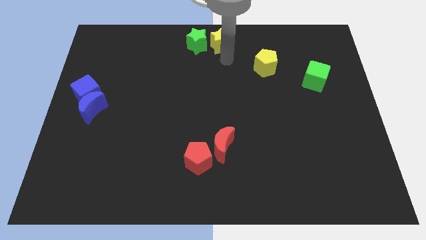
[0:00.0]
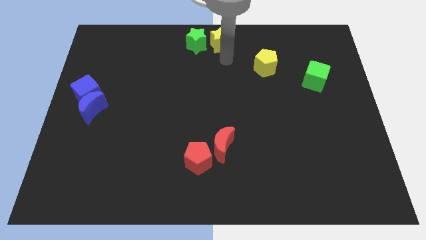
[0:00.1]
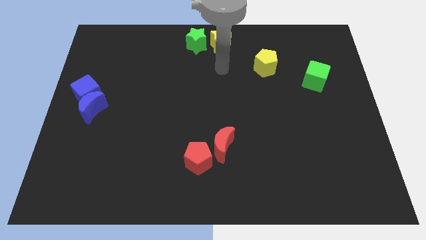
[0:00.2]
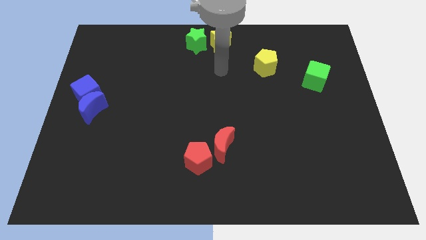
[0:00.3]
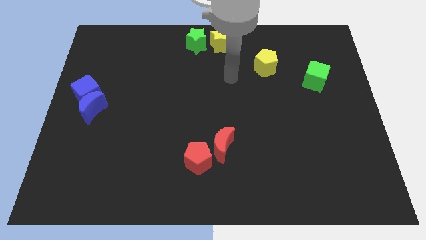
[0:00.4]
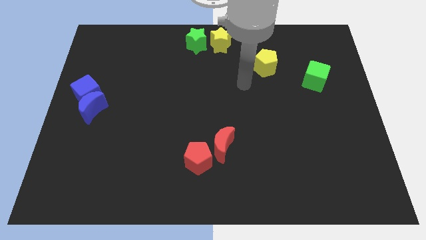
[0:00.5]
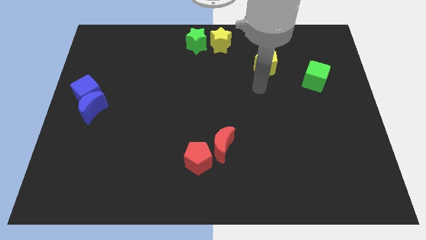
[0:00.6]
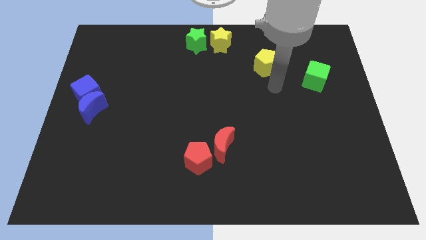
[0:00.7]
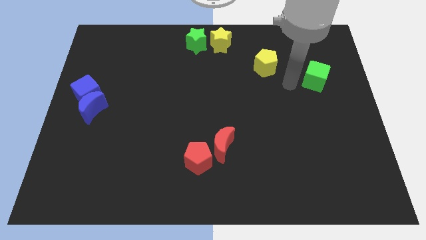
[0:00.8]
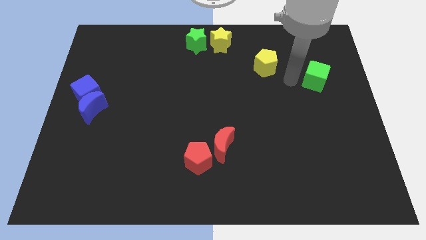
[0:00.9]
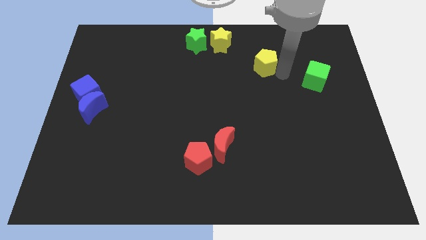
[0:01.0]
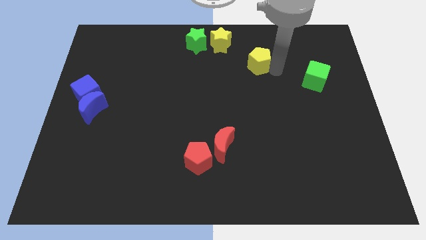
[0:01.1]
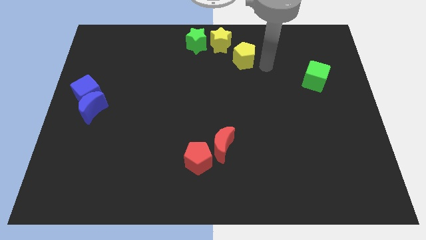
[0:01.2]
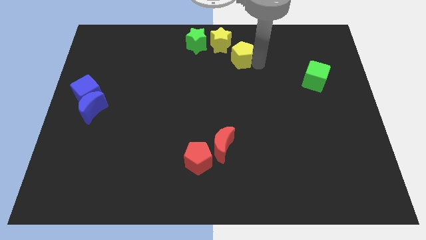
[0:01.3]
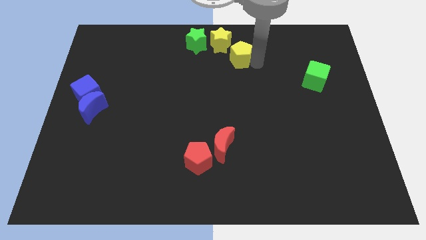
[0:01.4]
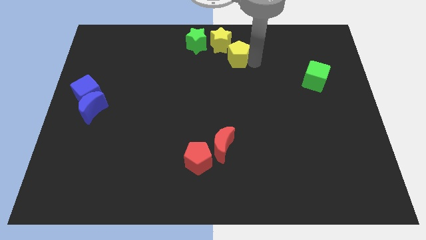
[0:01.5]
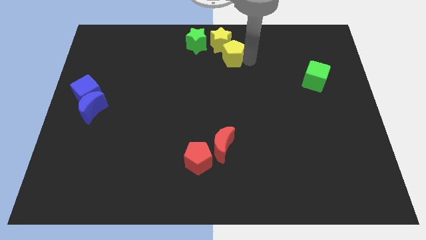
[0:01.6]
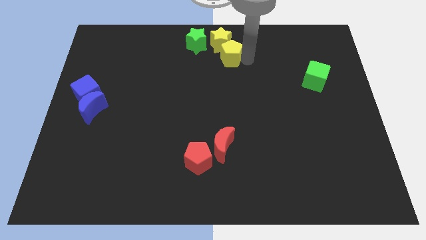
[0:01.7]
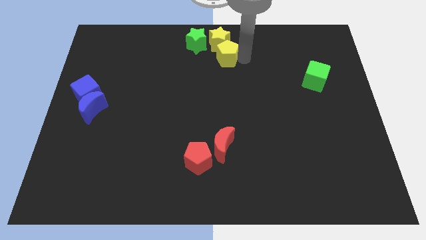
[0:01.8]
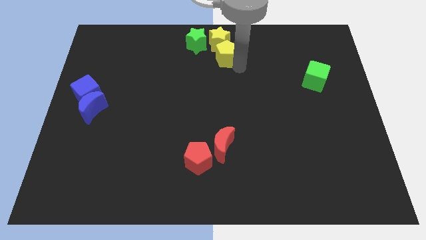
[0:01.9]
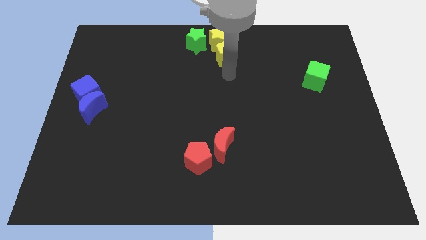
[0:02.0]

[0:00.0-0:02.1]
move the yellow pentagon under the yellow star

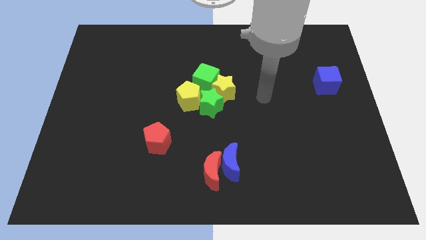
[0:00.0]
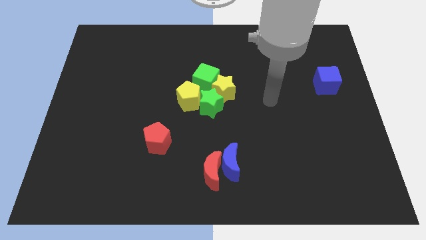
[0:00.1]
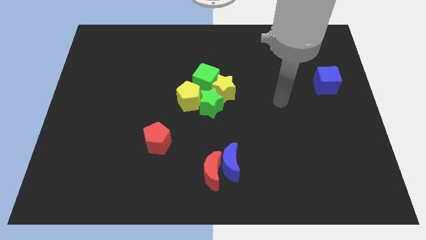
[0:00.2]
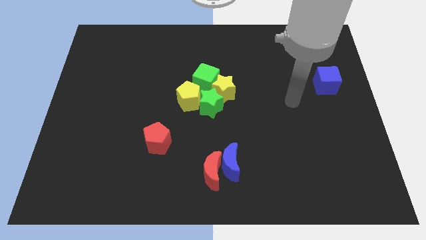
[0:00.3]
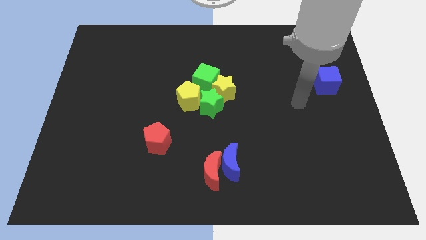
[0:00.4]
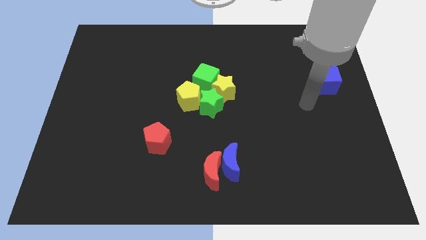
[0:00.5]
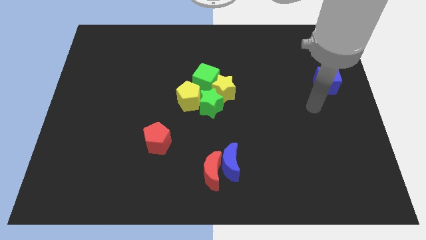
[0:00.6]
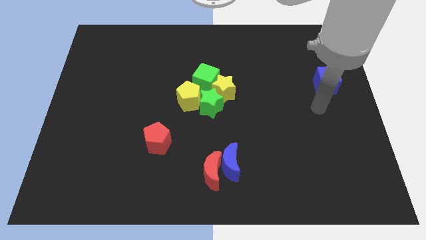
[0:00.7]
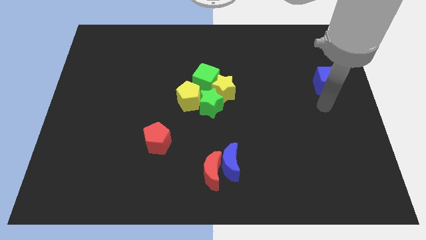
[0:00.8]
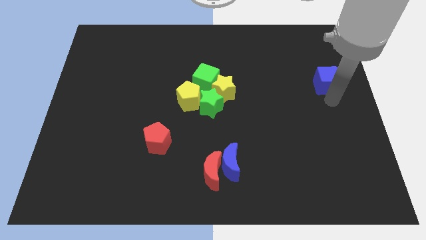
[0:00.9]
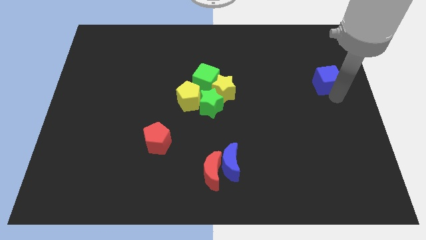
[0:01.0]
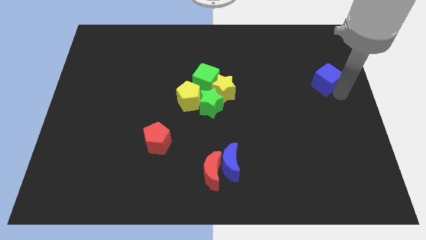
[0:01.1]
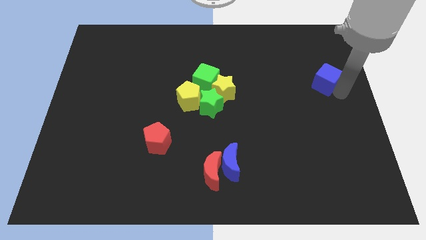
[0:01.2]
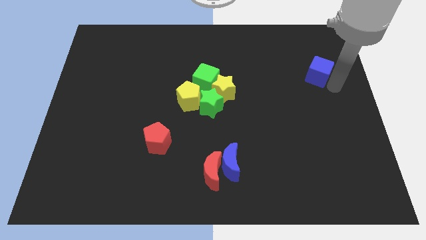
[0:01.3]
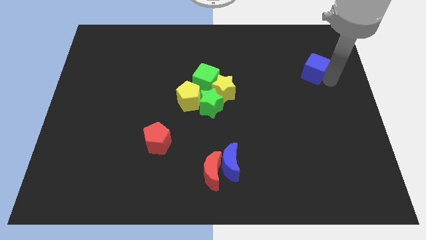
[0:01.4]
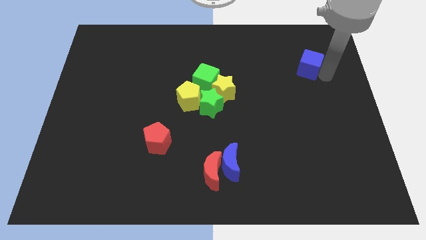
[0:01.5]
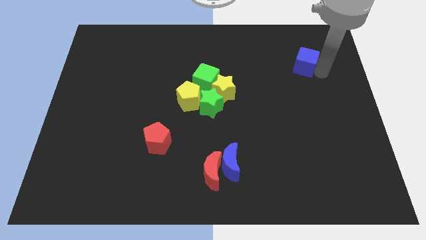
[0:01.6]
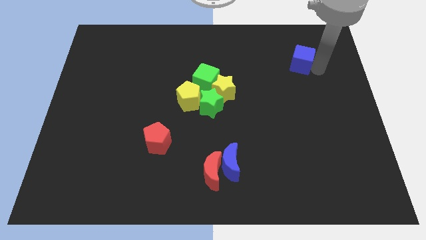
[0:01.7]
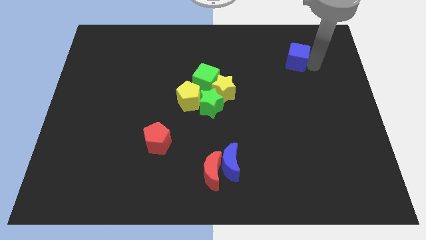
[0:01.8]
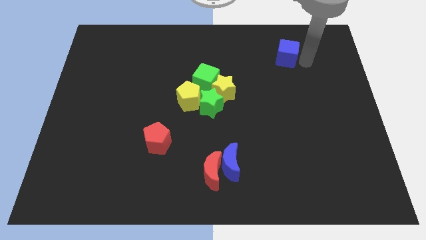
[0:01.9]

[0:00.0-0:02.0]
move the blue cube towards the top right of the board

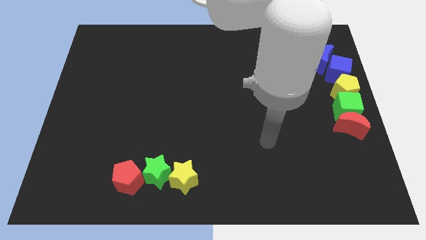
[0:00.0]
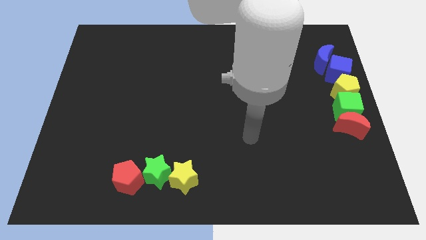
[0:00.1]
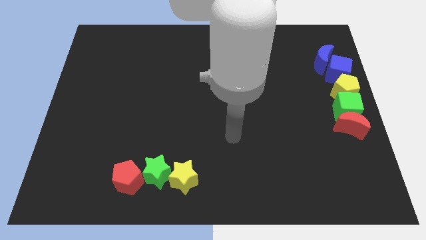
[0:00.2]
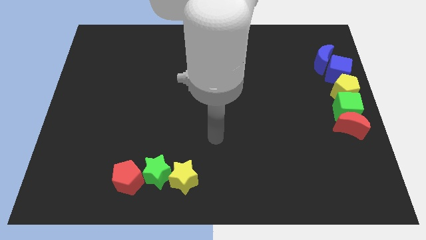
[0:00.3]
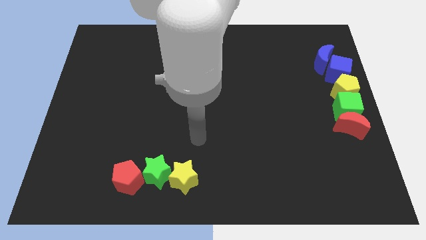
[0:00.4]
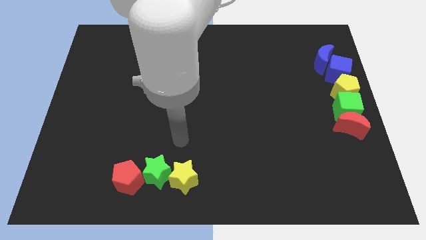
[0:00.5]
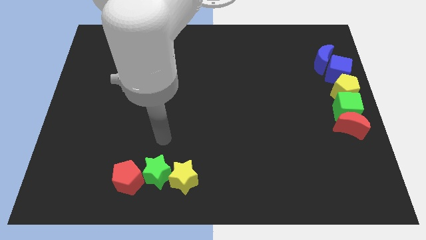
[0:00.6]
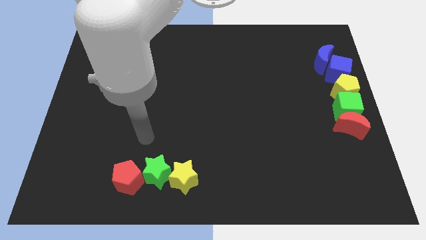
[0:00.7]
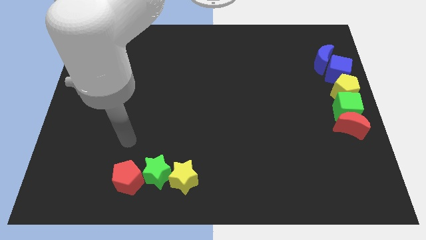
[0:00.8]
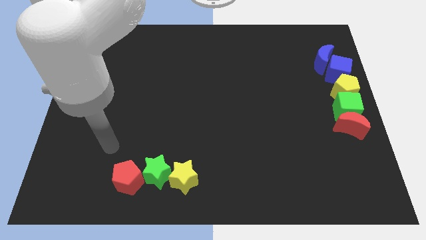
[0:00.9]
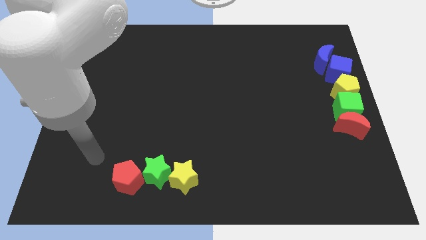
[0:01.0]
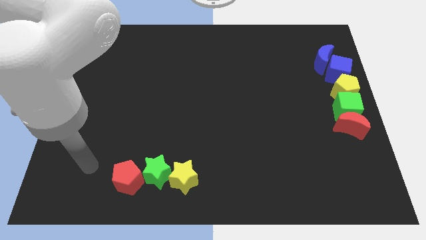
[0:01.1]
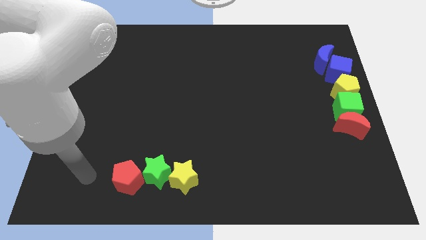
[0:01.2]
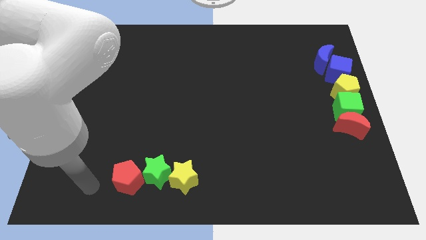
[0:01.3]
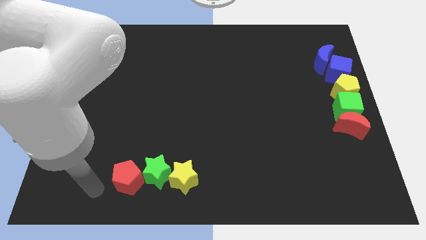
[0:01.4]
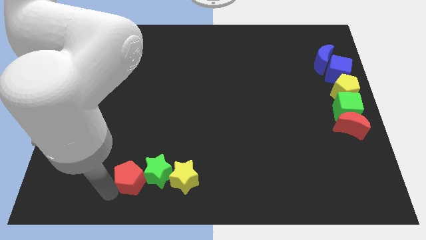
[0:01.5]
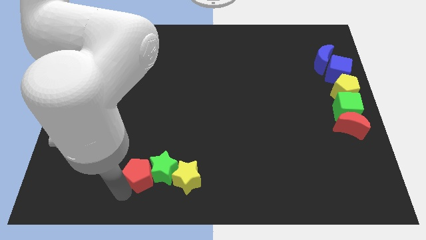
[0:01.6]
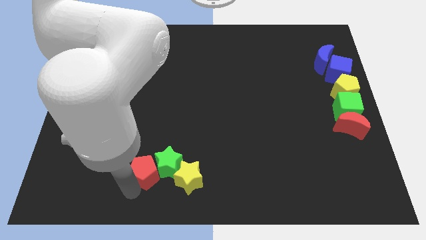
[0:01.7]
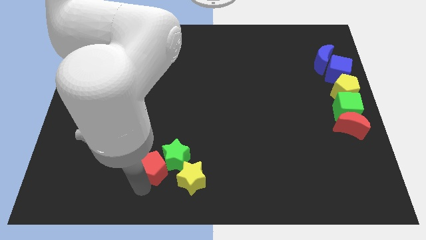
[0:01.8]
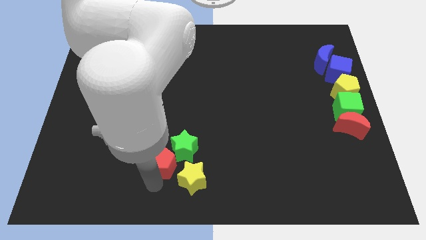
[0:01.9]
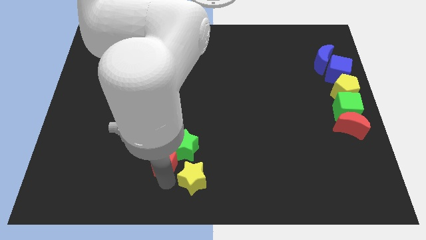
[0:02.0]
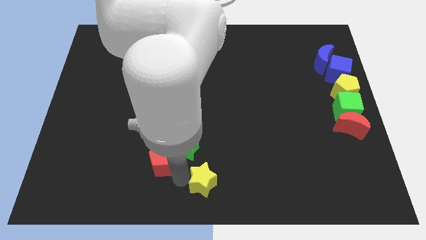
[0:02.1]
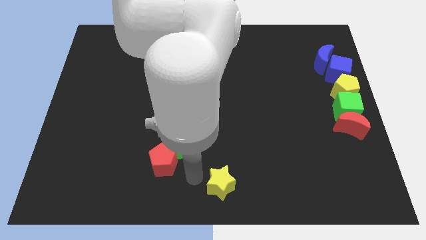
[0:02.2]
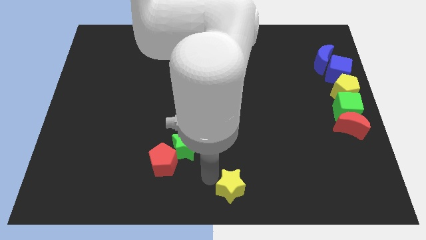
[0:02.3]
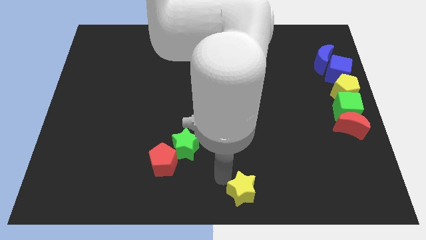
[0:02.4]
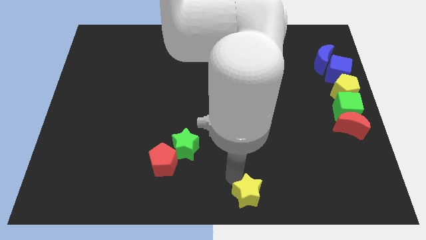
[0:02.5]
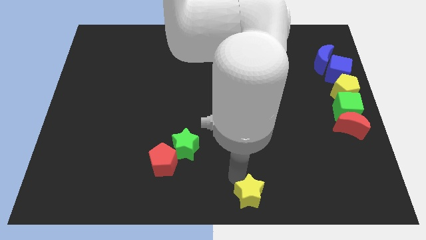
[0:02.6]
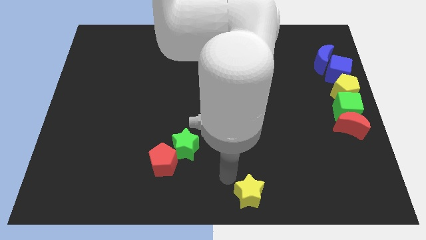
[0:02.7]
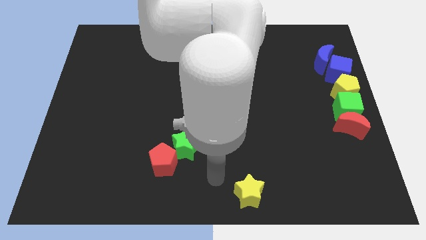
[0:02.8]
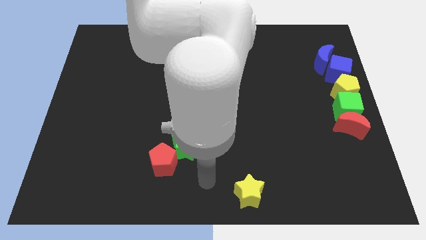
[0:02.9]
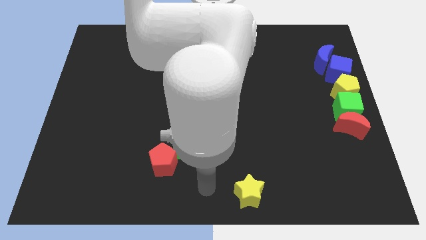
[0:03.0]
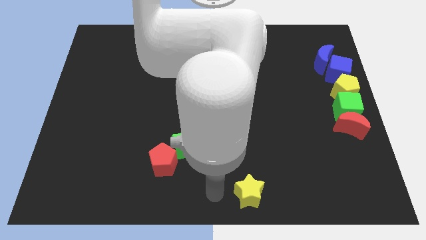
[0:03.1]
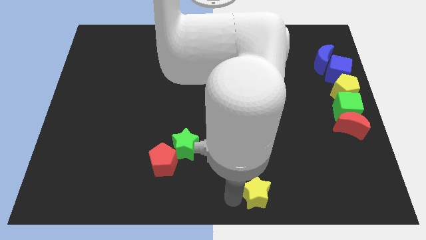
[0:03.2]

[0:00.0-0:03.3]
separate yellow star from red pentagon

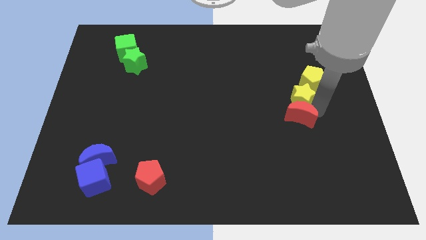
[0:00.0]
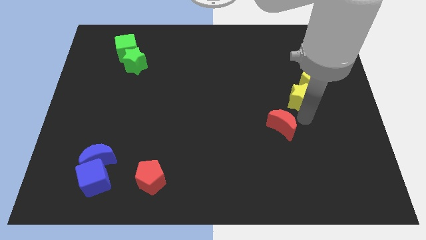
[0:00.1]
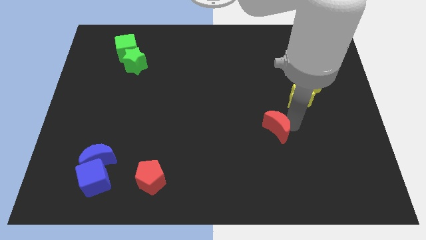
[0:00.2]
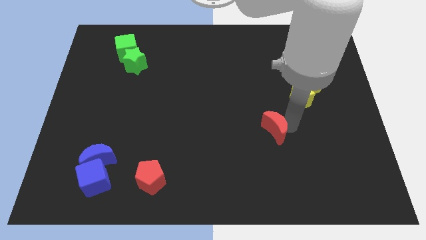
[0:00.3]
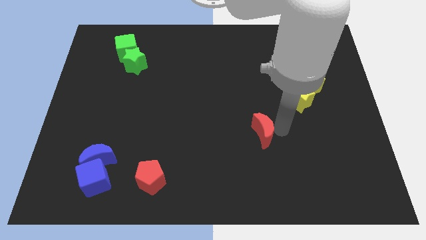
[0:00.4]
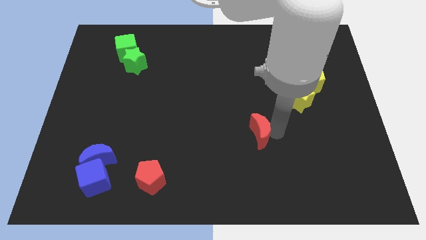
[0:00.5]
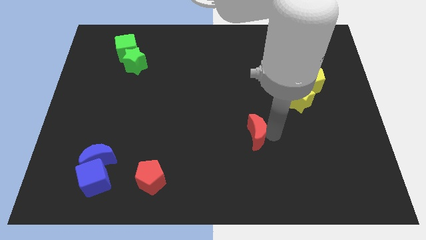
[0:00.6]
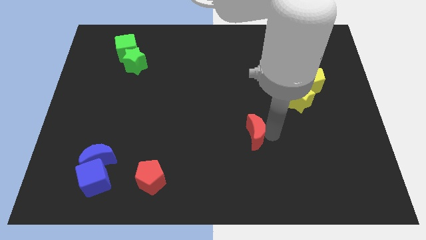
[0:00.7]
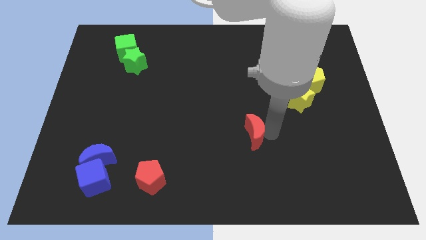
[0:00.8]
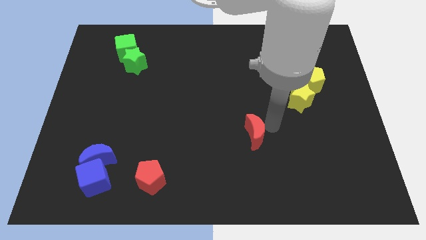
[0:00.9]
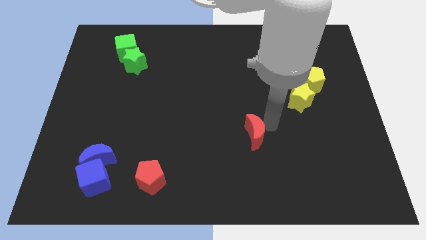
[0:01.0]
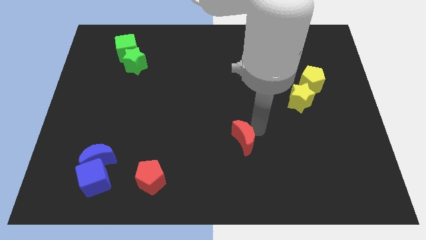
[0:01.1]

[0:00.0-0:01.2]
separate red moon from the yellow star

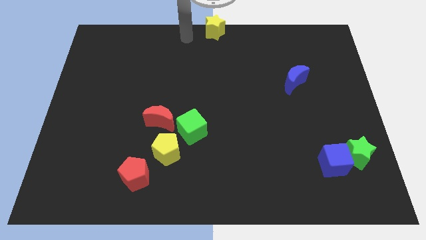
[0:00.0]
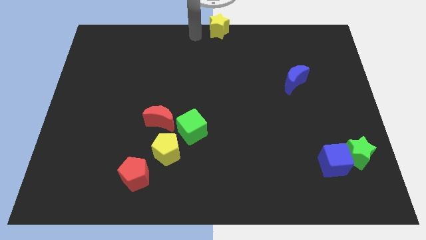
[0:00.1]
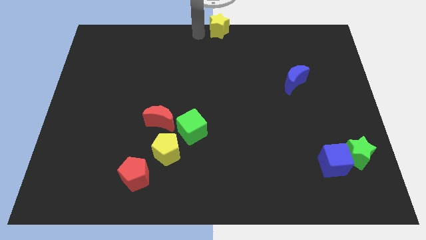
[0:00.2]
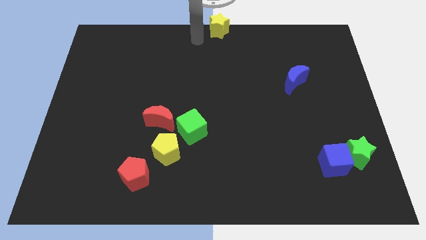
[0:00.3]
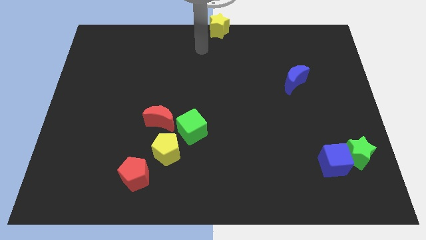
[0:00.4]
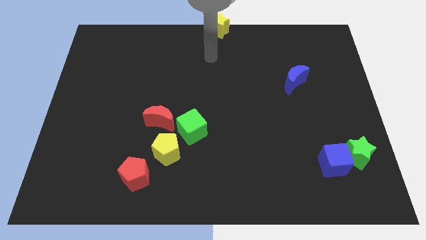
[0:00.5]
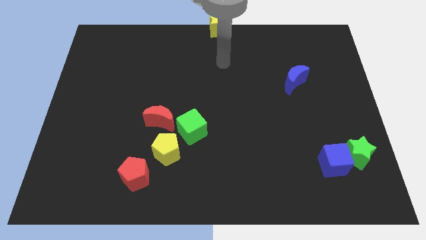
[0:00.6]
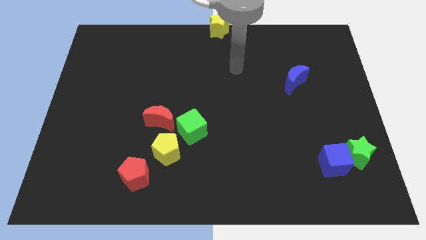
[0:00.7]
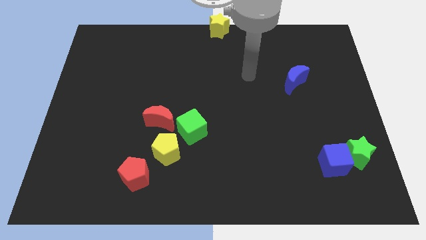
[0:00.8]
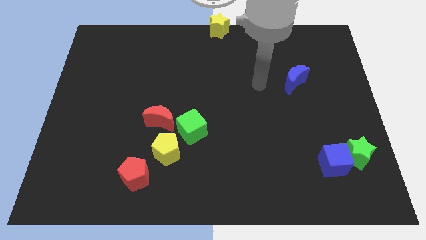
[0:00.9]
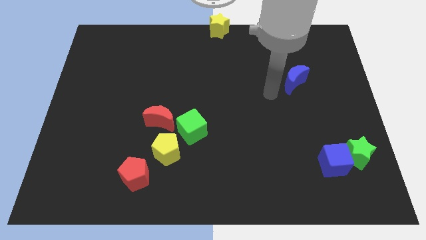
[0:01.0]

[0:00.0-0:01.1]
move your arm away from yellow star
